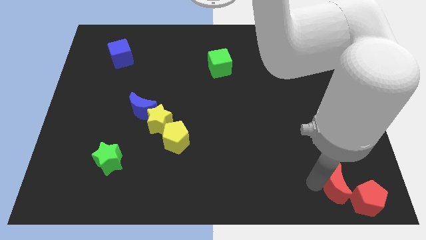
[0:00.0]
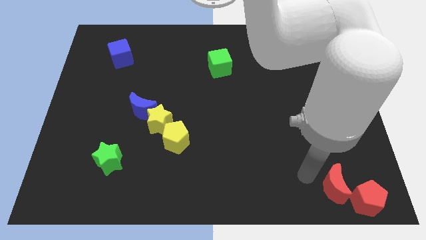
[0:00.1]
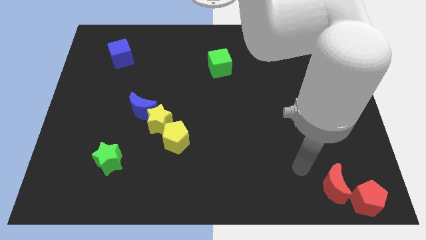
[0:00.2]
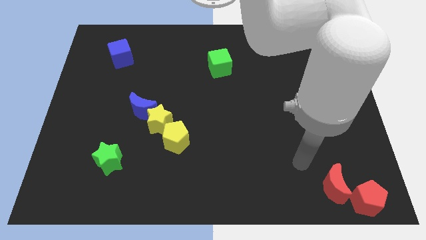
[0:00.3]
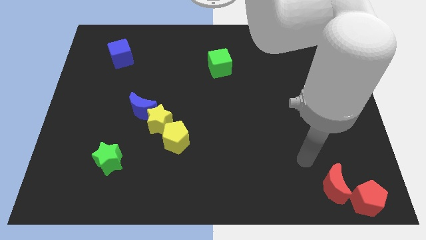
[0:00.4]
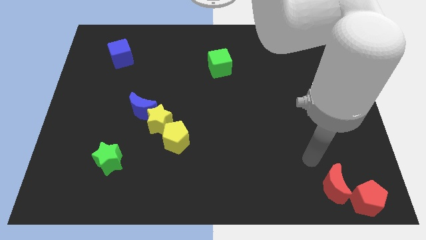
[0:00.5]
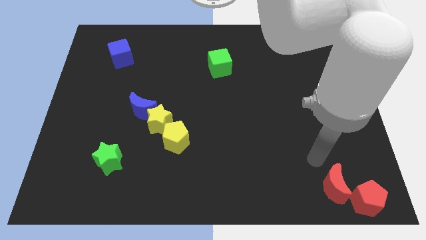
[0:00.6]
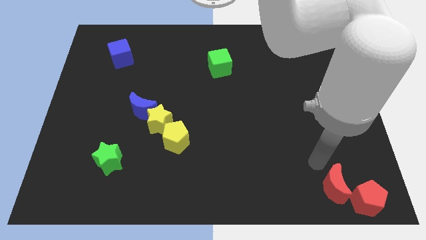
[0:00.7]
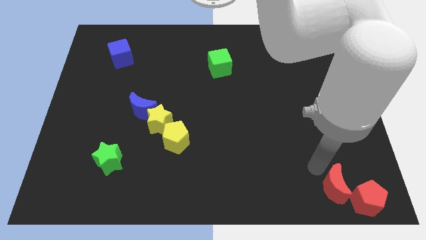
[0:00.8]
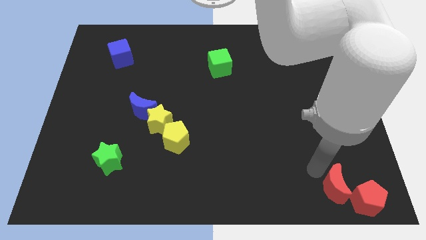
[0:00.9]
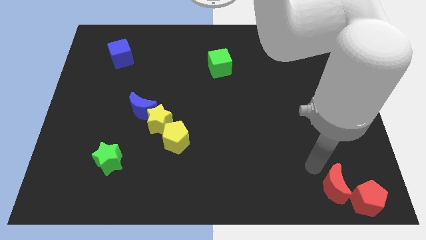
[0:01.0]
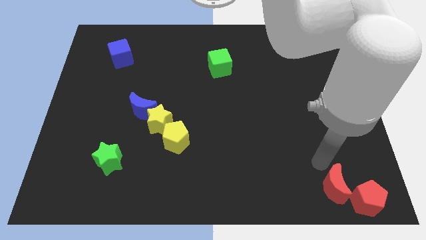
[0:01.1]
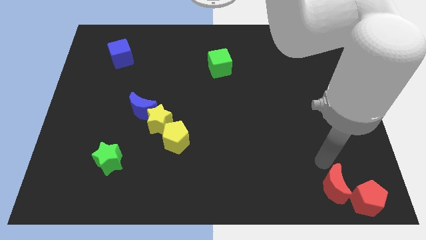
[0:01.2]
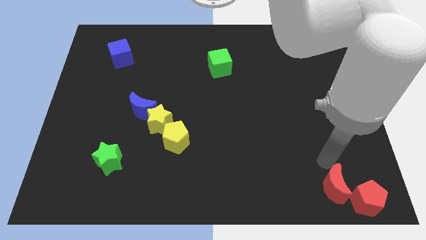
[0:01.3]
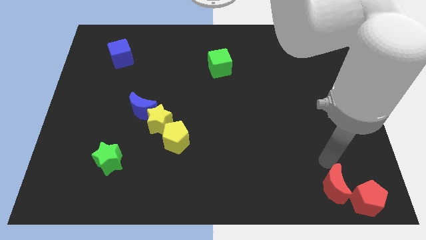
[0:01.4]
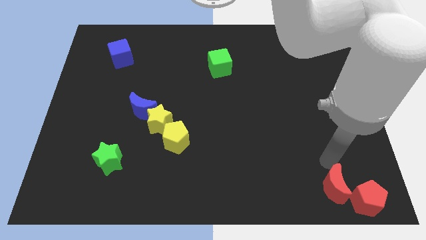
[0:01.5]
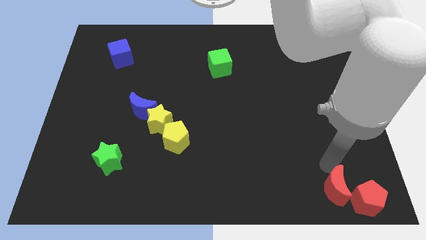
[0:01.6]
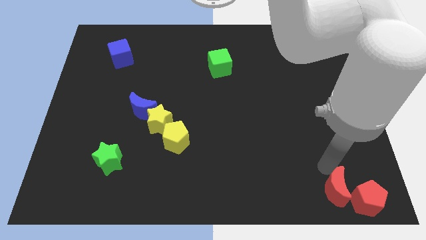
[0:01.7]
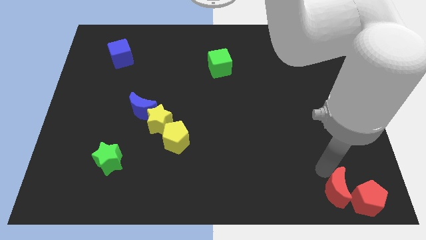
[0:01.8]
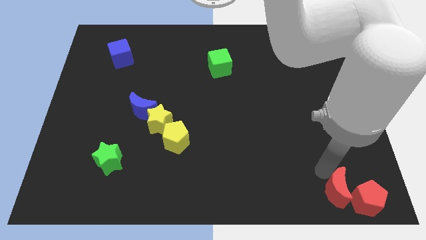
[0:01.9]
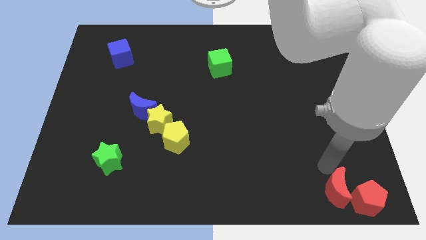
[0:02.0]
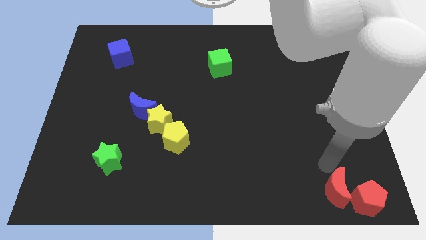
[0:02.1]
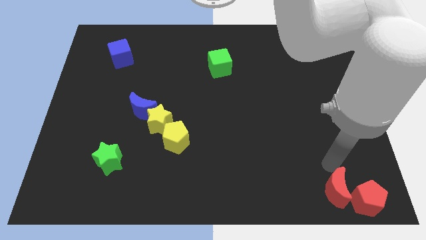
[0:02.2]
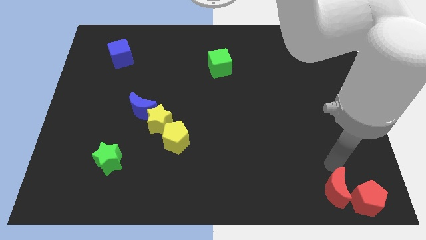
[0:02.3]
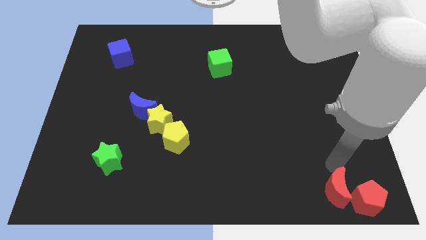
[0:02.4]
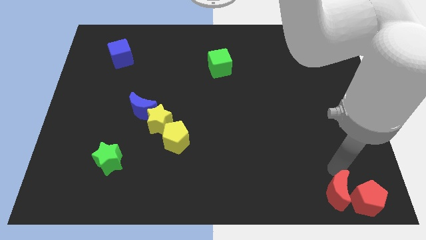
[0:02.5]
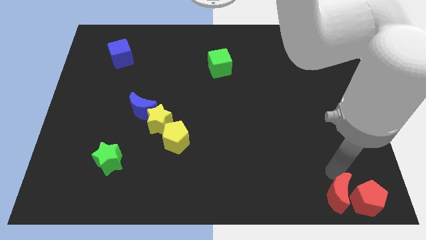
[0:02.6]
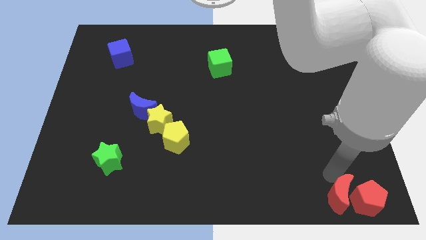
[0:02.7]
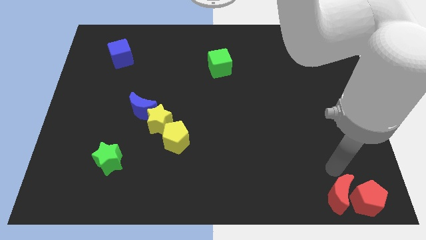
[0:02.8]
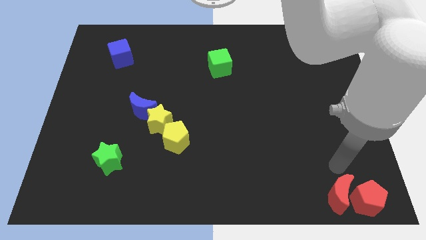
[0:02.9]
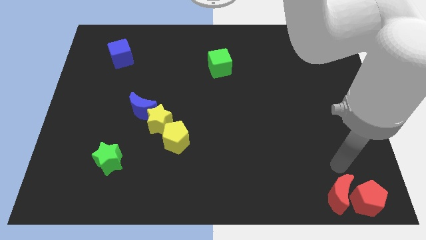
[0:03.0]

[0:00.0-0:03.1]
arrange the red moon on the left side of the red pentagon

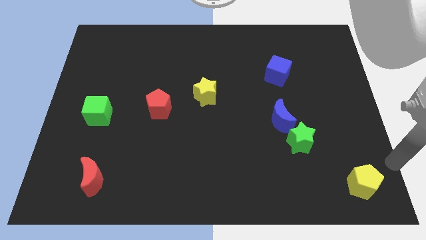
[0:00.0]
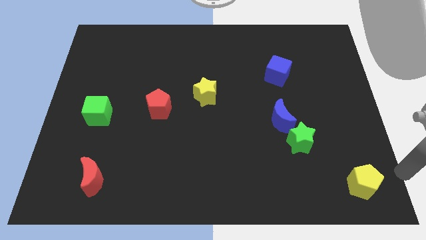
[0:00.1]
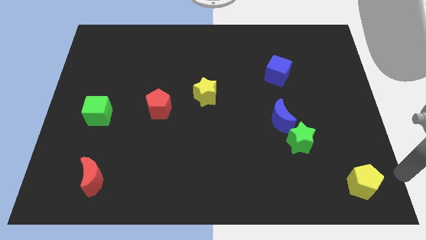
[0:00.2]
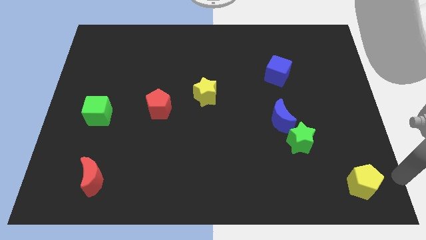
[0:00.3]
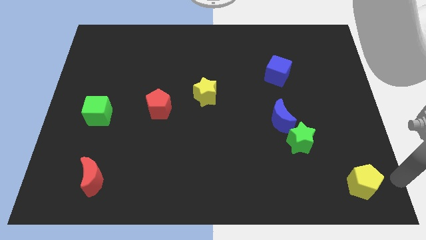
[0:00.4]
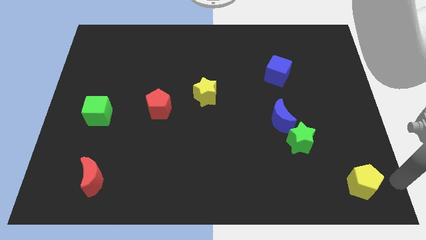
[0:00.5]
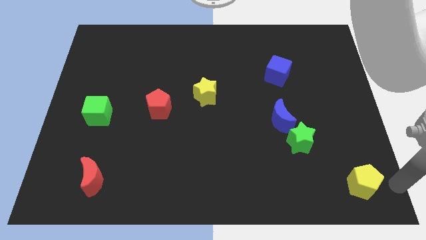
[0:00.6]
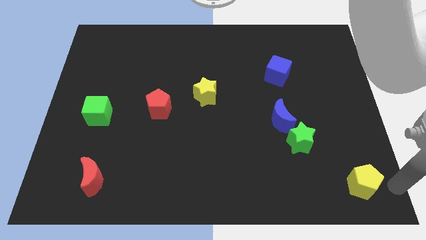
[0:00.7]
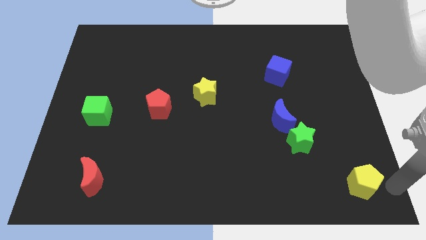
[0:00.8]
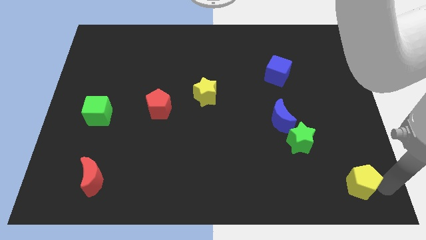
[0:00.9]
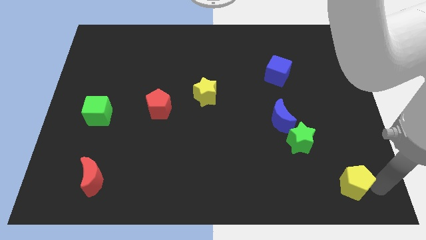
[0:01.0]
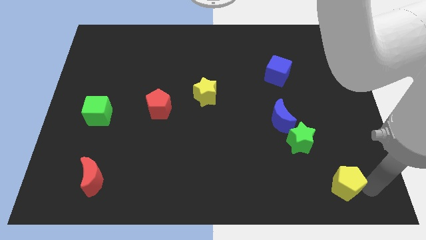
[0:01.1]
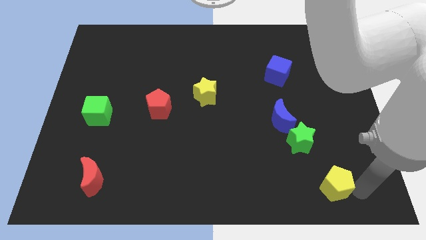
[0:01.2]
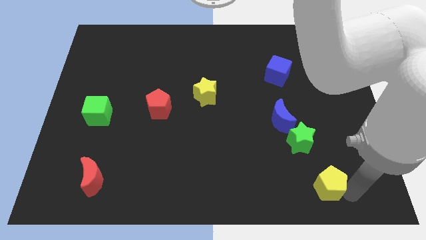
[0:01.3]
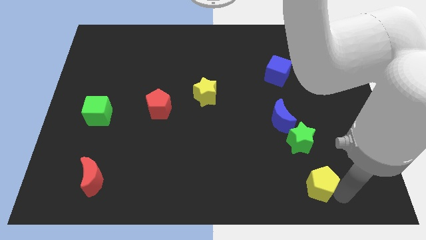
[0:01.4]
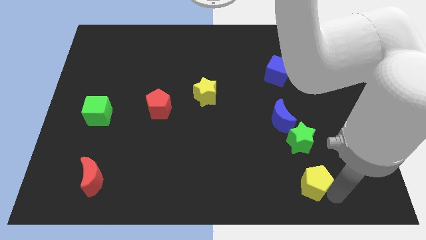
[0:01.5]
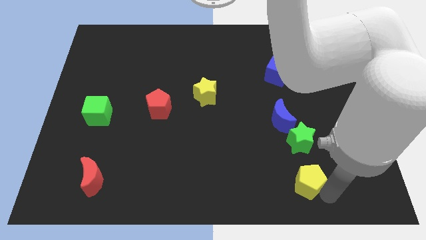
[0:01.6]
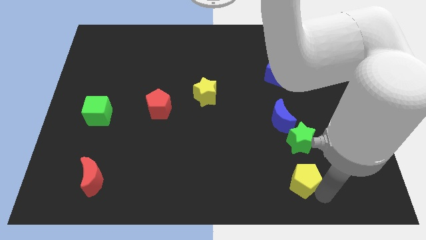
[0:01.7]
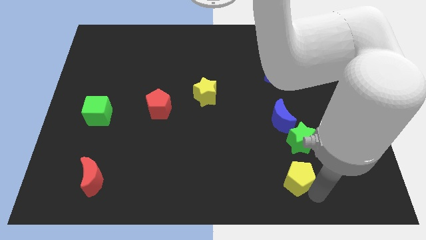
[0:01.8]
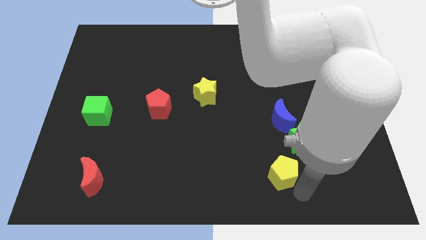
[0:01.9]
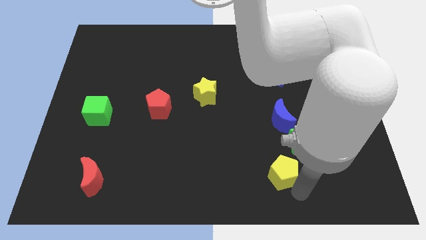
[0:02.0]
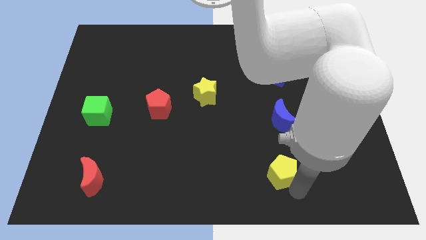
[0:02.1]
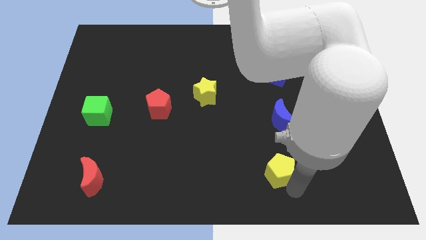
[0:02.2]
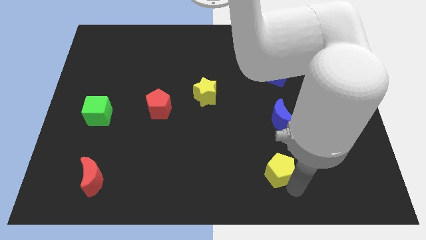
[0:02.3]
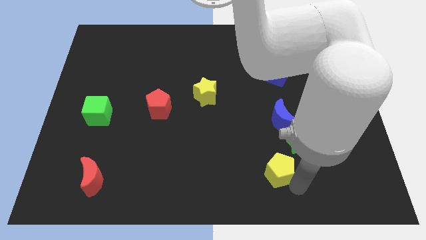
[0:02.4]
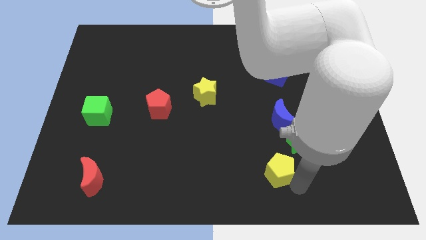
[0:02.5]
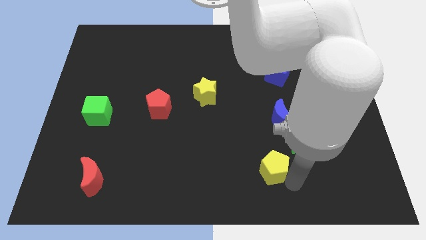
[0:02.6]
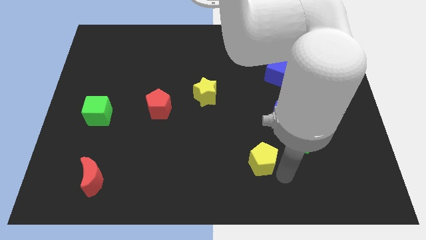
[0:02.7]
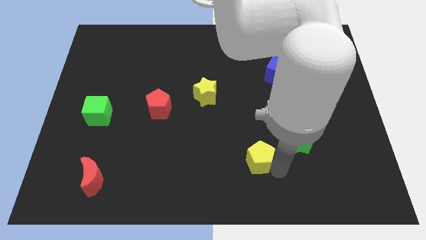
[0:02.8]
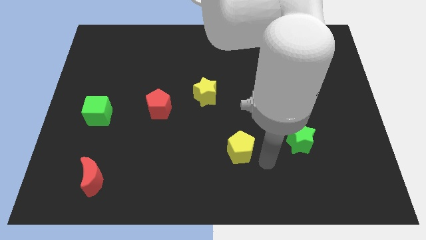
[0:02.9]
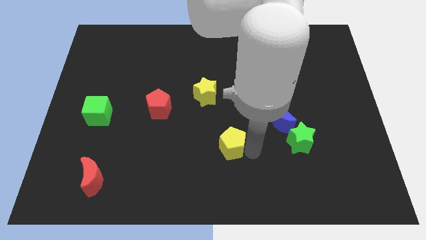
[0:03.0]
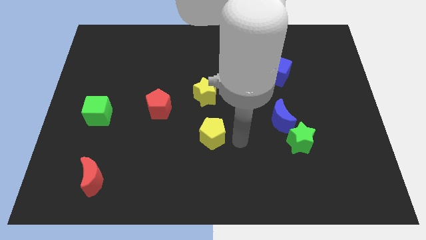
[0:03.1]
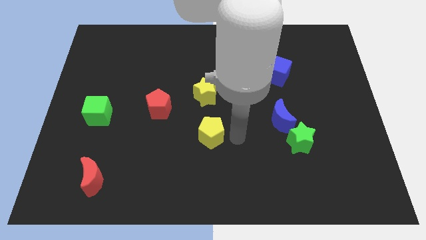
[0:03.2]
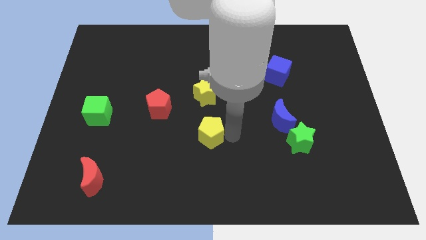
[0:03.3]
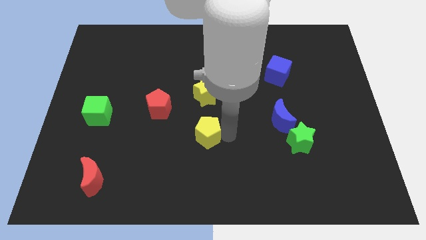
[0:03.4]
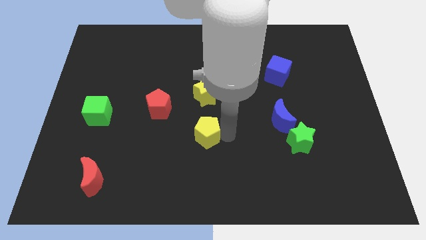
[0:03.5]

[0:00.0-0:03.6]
push the yellow pentagon to the bottom side of the yellow star

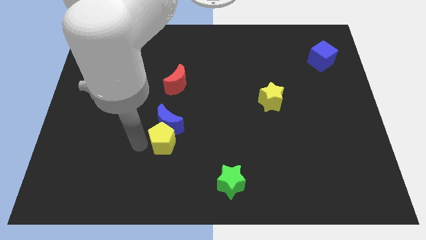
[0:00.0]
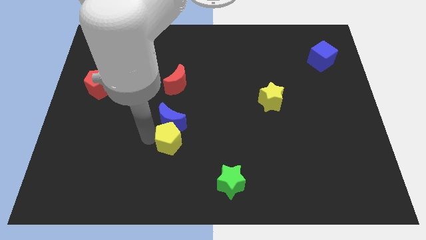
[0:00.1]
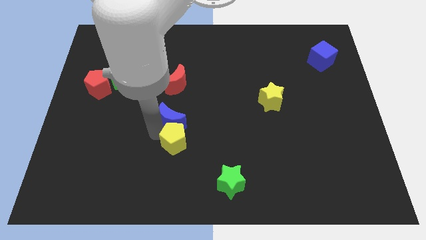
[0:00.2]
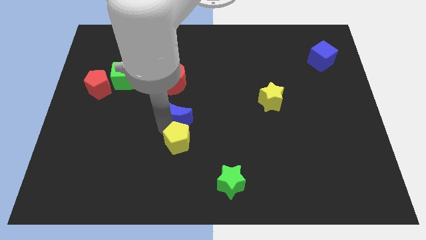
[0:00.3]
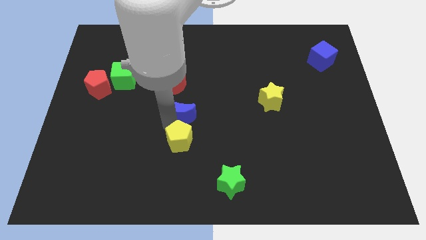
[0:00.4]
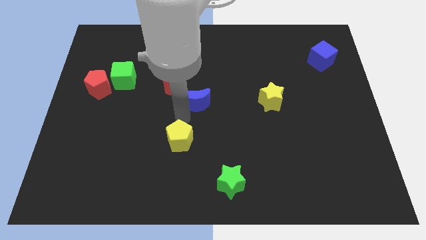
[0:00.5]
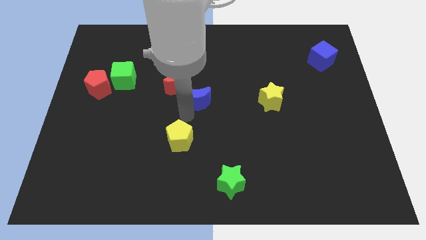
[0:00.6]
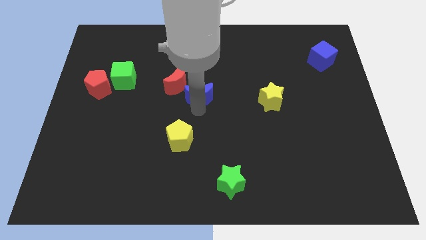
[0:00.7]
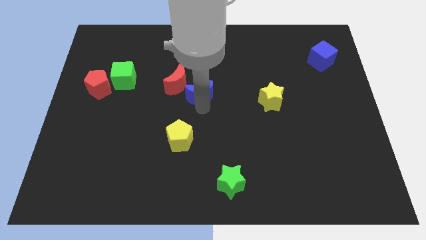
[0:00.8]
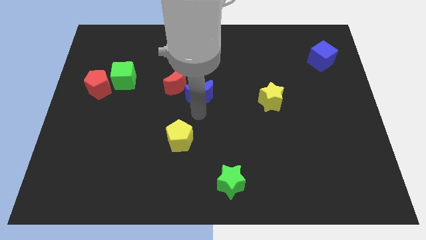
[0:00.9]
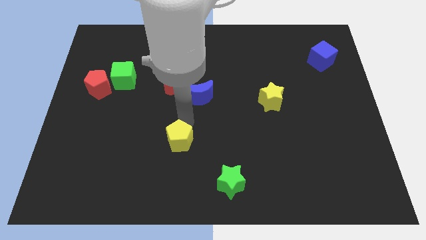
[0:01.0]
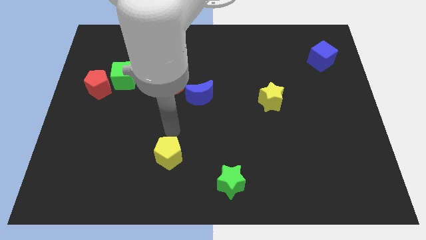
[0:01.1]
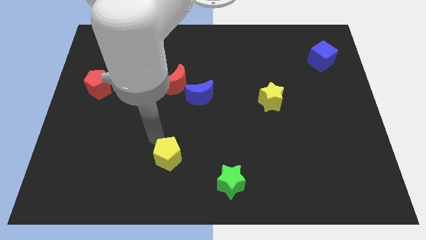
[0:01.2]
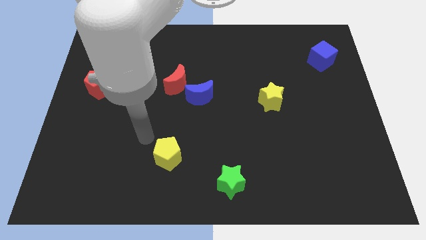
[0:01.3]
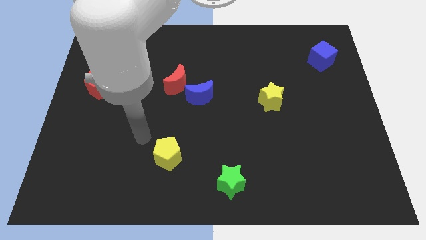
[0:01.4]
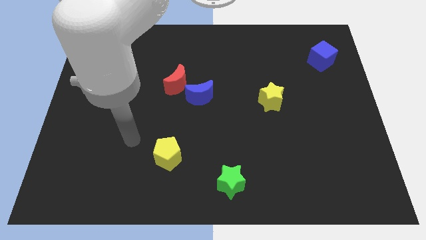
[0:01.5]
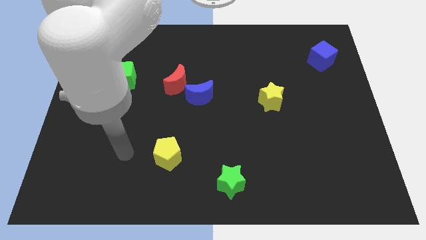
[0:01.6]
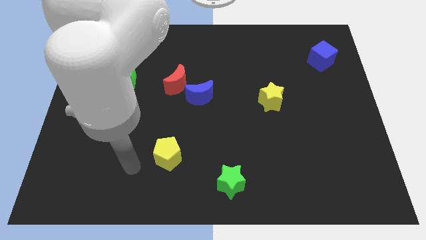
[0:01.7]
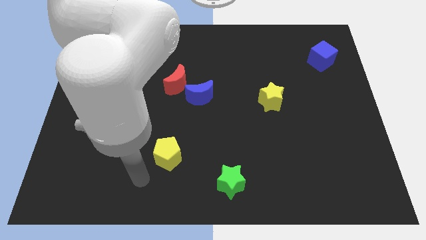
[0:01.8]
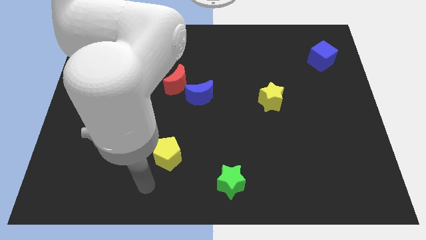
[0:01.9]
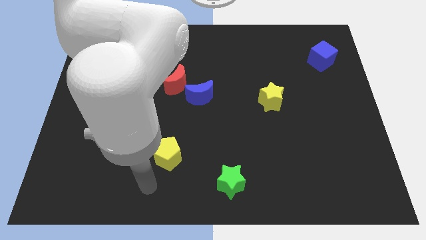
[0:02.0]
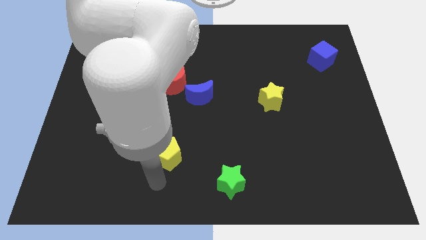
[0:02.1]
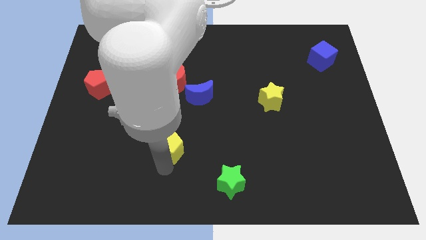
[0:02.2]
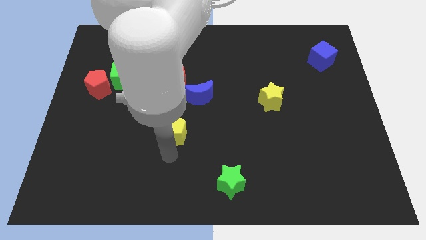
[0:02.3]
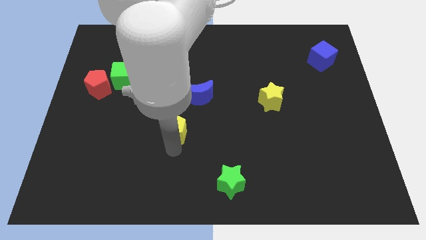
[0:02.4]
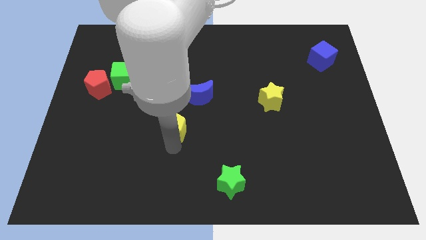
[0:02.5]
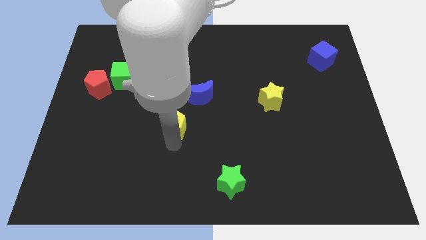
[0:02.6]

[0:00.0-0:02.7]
separate yellow pentagon and blue moon
